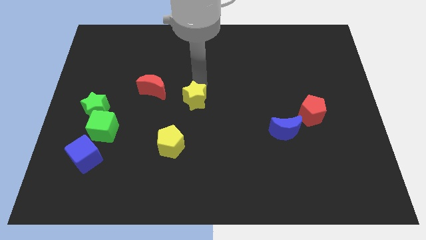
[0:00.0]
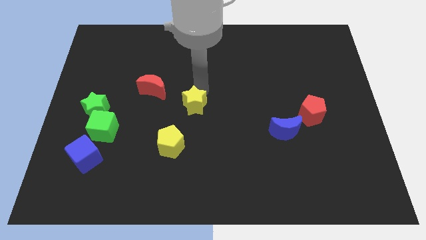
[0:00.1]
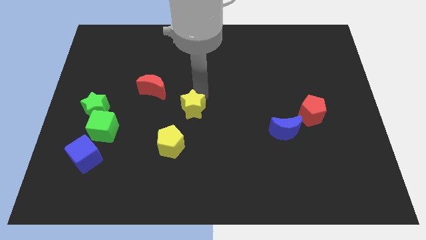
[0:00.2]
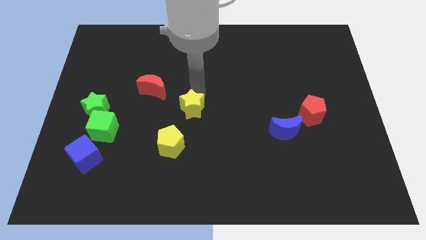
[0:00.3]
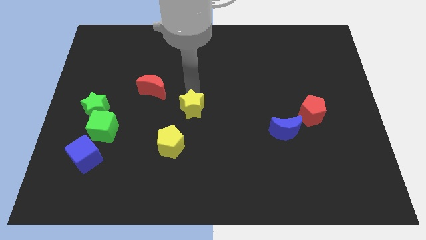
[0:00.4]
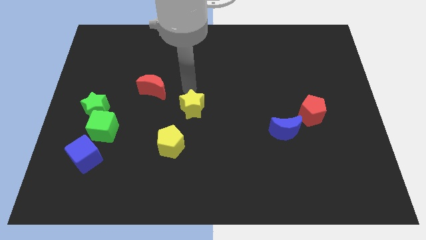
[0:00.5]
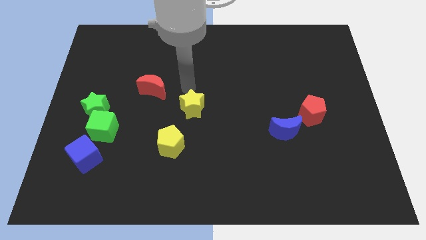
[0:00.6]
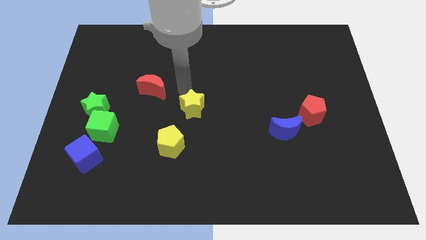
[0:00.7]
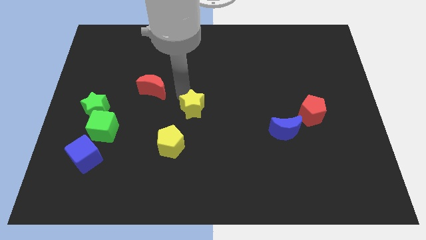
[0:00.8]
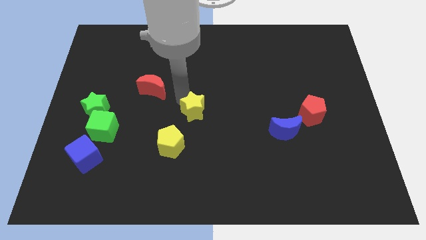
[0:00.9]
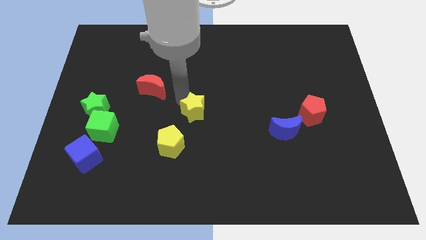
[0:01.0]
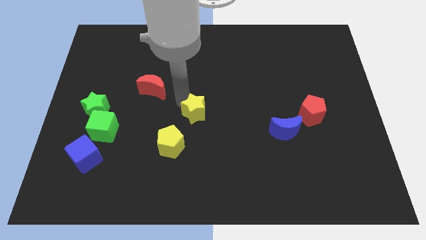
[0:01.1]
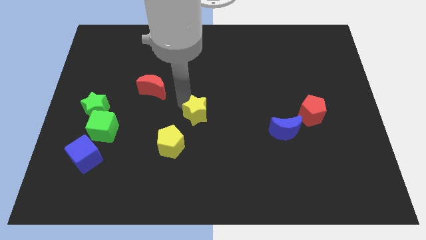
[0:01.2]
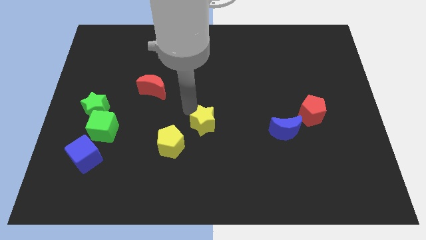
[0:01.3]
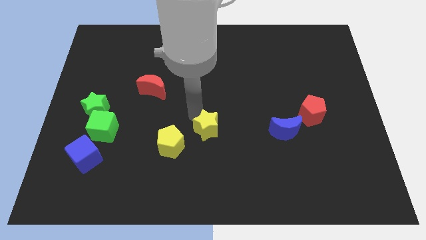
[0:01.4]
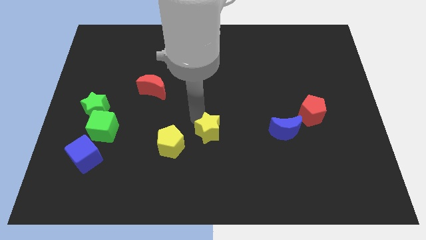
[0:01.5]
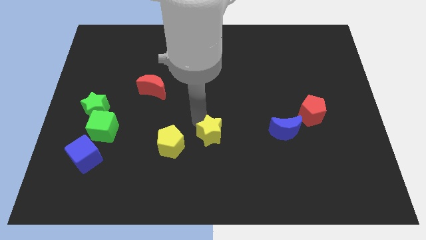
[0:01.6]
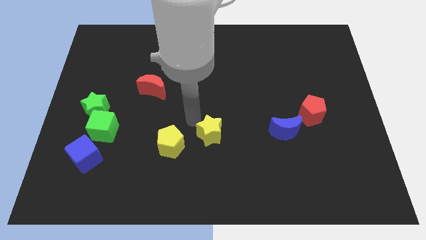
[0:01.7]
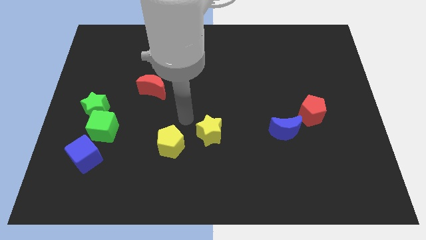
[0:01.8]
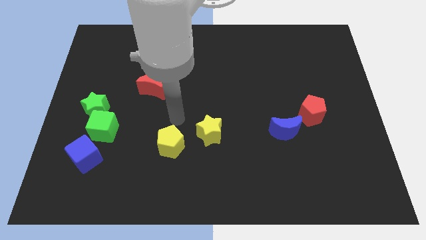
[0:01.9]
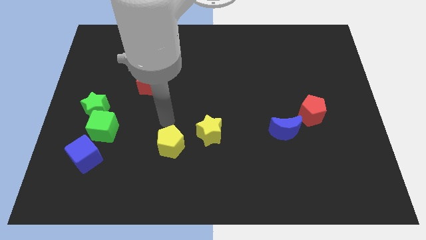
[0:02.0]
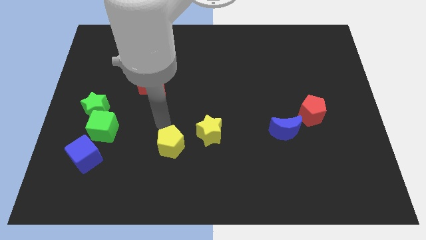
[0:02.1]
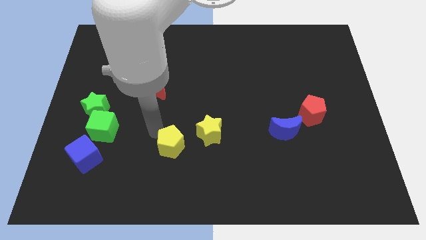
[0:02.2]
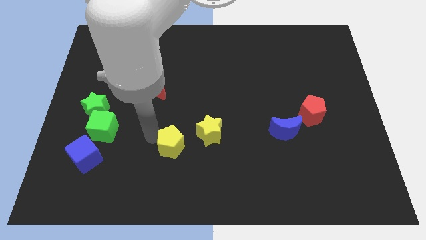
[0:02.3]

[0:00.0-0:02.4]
push the yellow star to the right of the yellow pentagon

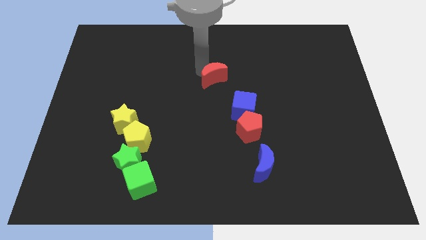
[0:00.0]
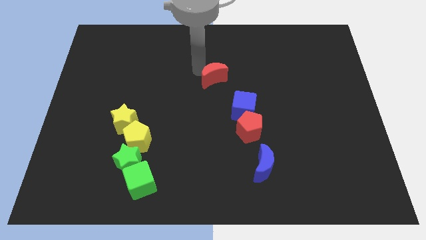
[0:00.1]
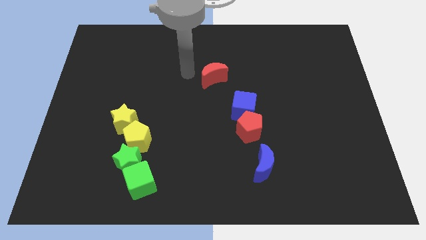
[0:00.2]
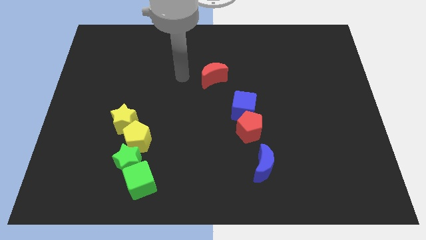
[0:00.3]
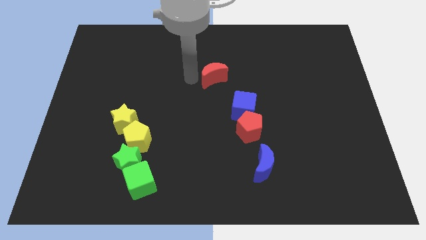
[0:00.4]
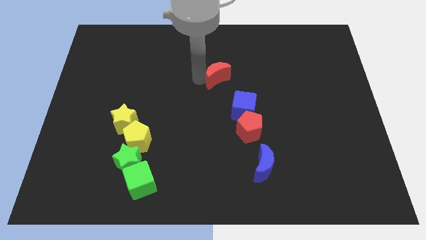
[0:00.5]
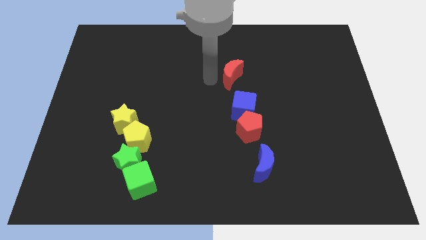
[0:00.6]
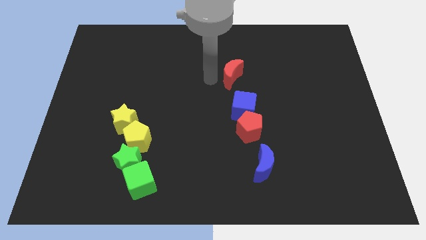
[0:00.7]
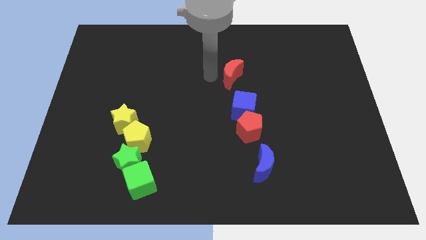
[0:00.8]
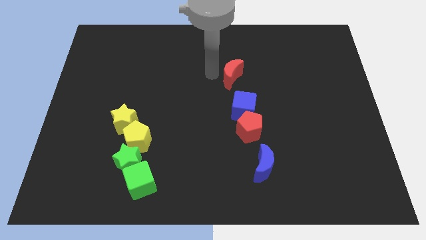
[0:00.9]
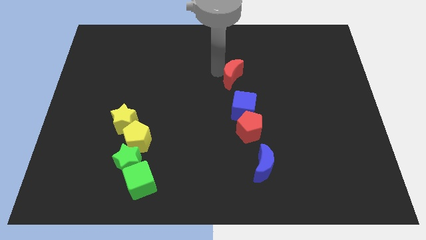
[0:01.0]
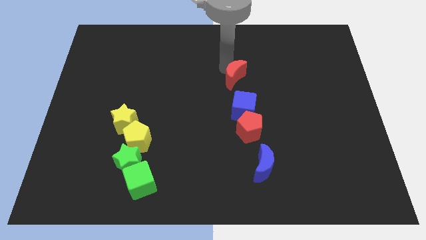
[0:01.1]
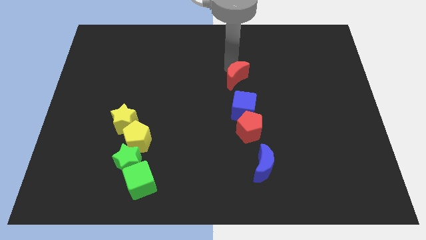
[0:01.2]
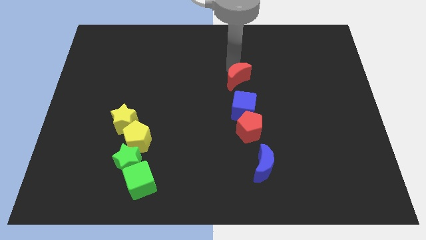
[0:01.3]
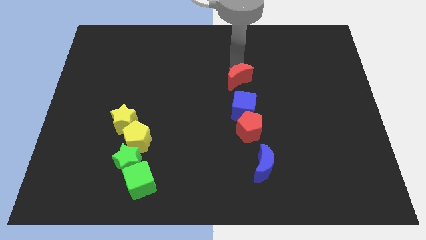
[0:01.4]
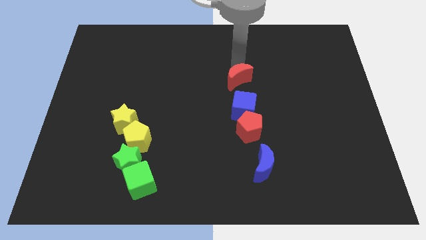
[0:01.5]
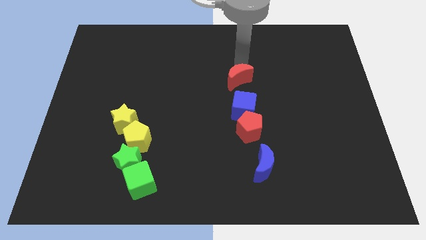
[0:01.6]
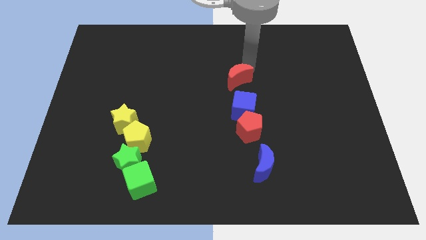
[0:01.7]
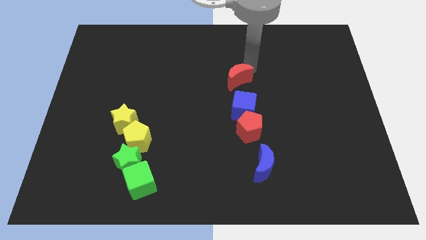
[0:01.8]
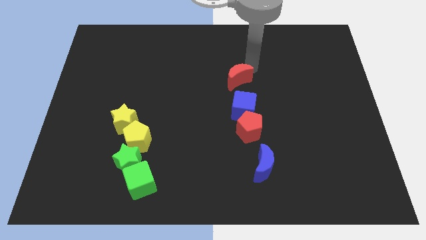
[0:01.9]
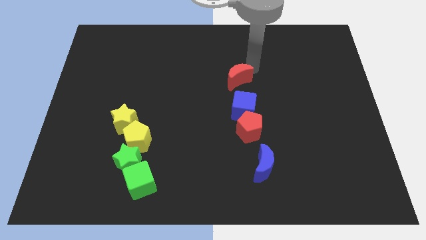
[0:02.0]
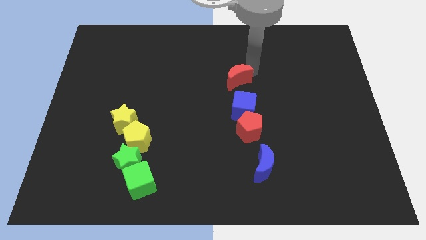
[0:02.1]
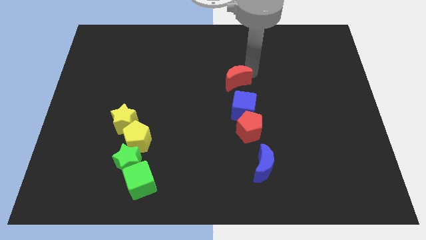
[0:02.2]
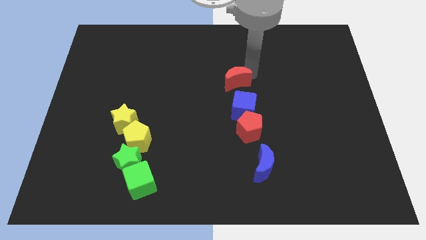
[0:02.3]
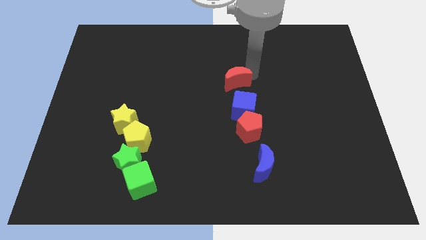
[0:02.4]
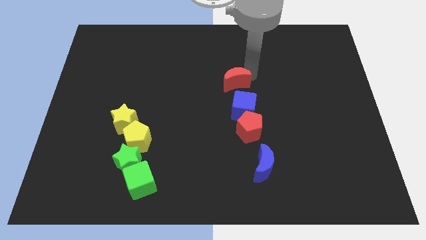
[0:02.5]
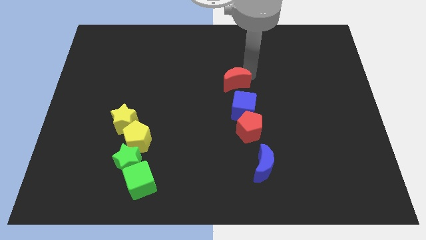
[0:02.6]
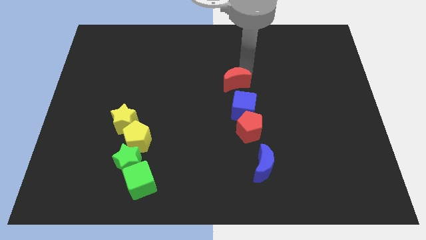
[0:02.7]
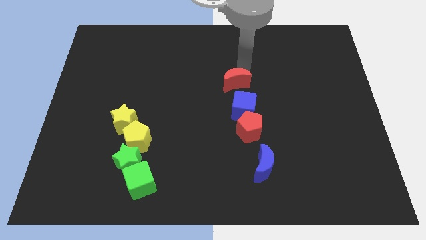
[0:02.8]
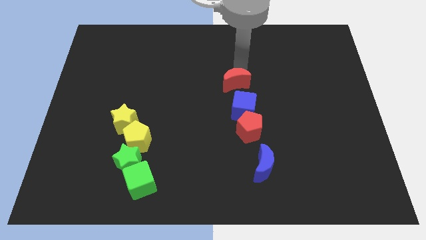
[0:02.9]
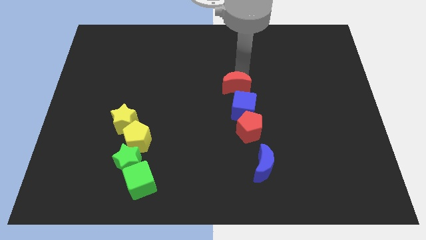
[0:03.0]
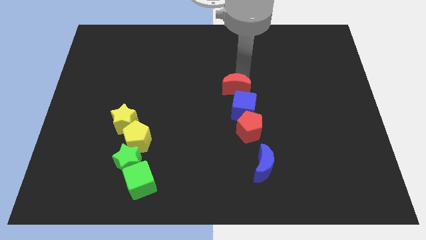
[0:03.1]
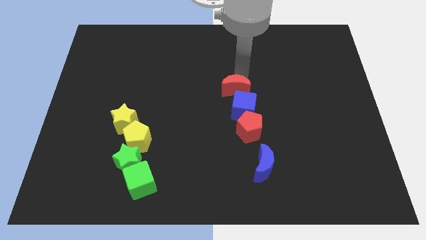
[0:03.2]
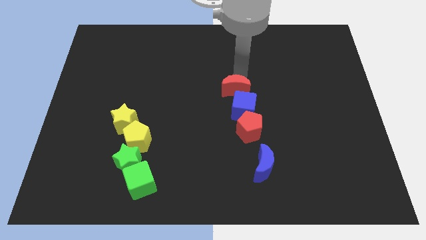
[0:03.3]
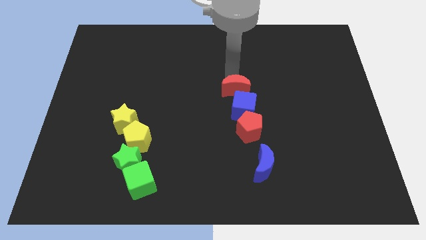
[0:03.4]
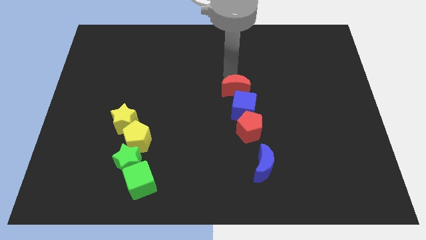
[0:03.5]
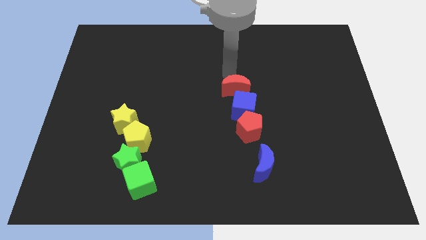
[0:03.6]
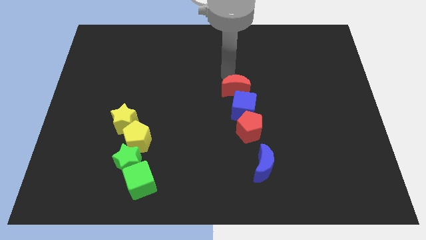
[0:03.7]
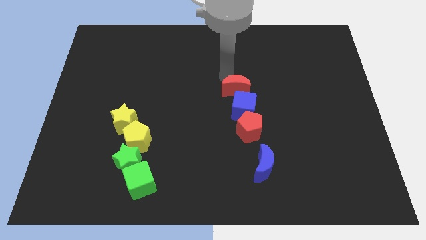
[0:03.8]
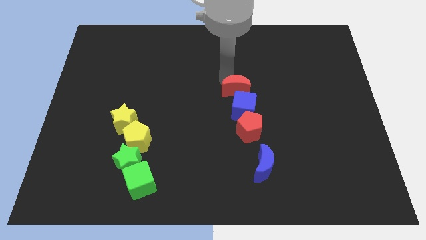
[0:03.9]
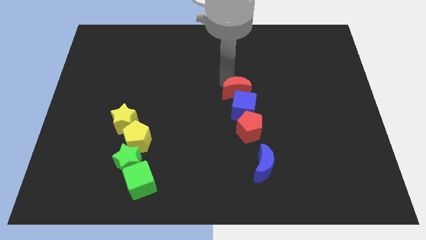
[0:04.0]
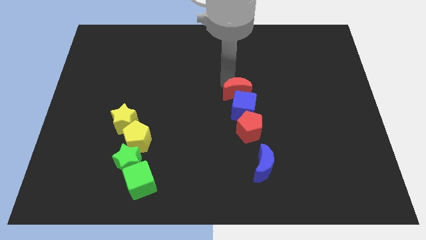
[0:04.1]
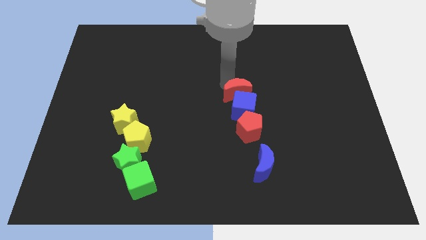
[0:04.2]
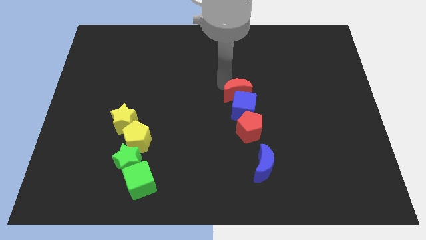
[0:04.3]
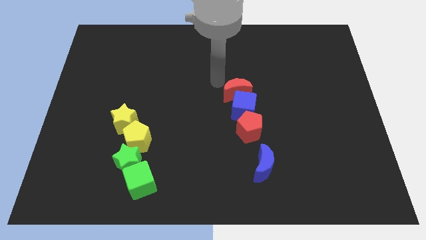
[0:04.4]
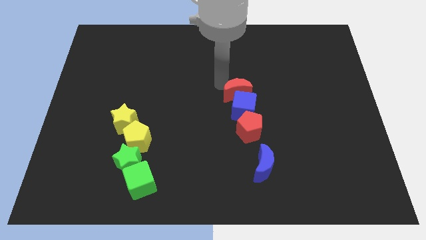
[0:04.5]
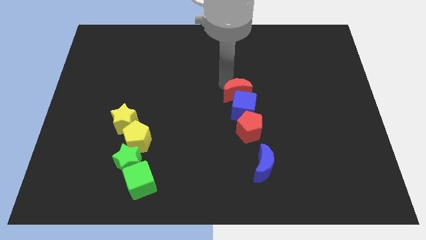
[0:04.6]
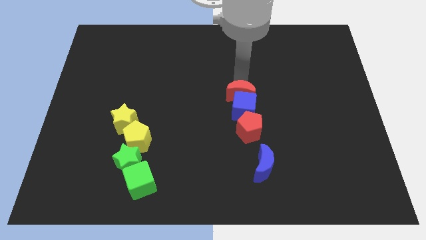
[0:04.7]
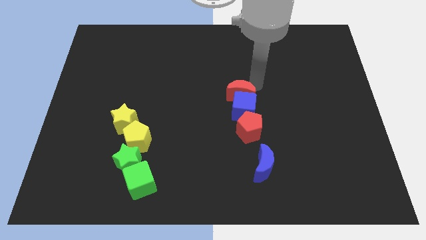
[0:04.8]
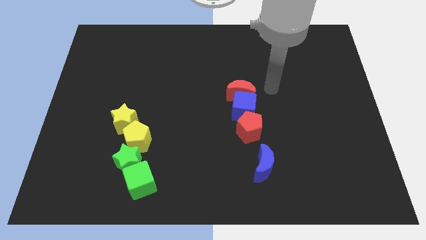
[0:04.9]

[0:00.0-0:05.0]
drag the red crescent into the top side of the blue cube

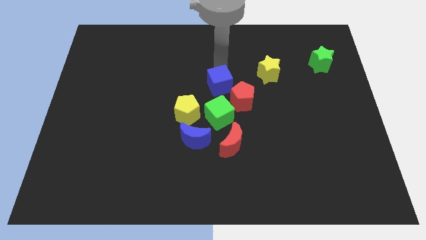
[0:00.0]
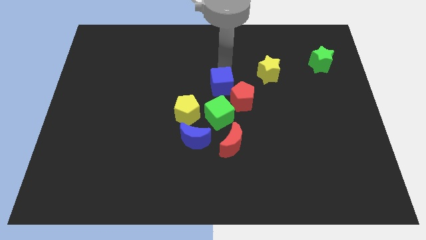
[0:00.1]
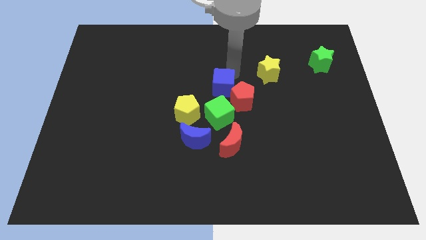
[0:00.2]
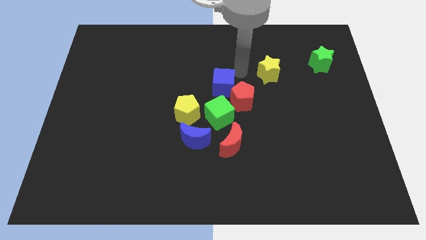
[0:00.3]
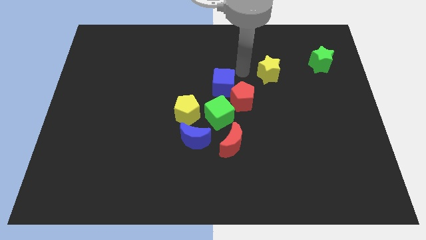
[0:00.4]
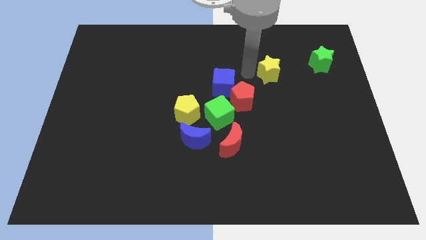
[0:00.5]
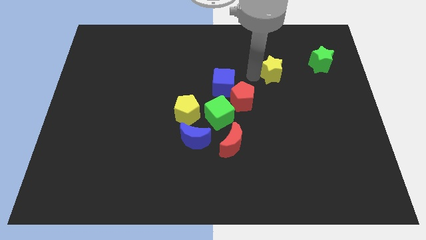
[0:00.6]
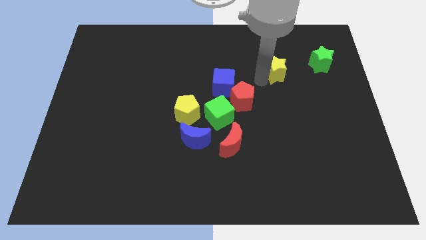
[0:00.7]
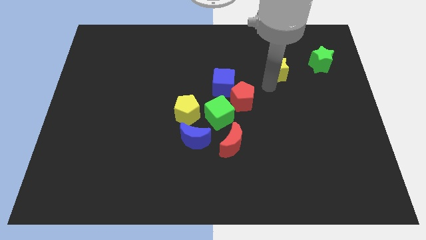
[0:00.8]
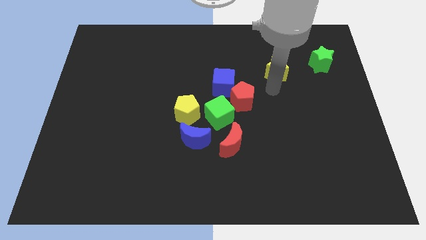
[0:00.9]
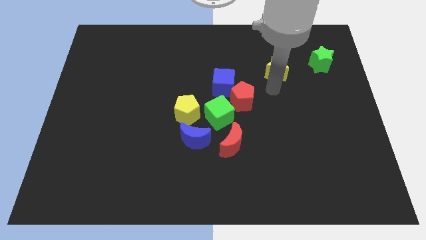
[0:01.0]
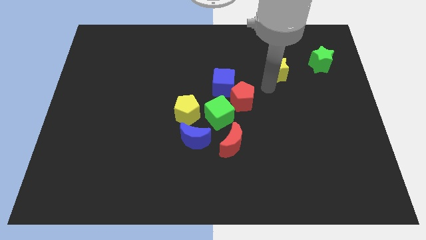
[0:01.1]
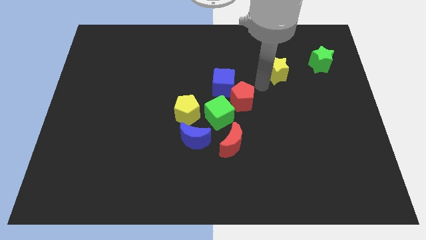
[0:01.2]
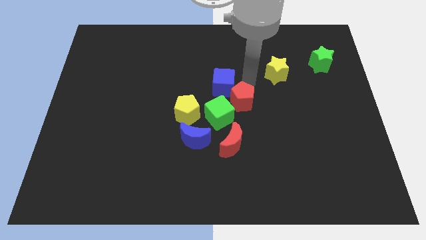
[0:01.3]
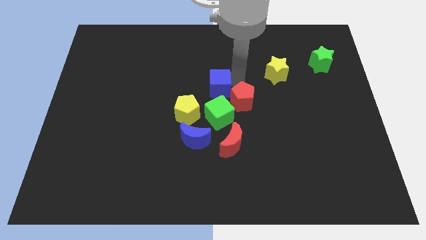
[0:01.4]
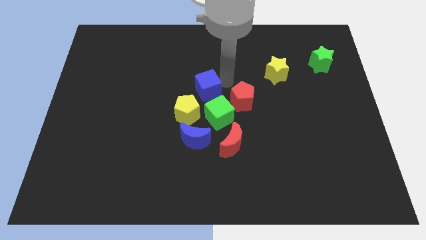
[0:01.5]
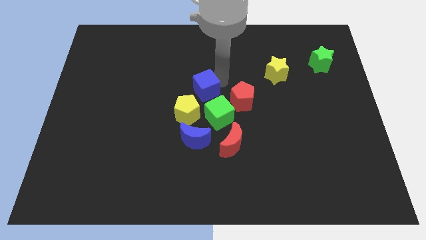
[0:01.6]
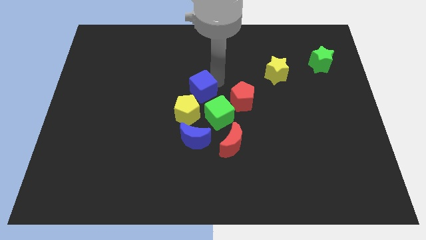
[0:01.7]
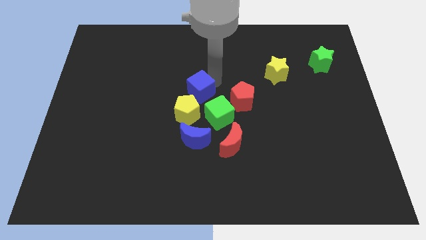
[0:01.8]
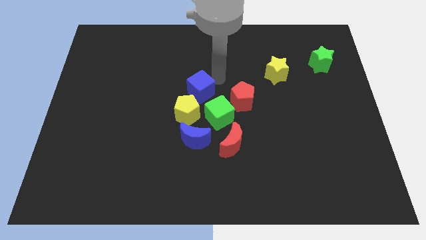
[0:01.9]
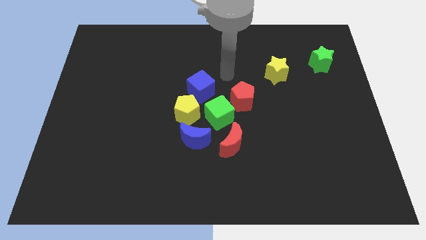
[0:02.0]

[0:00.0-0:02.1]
push the blue cube top right to the yellow pentagon
